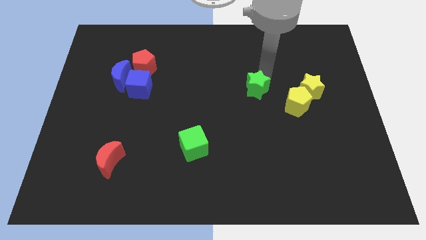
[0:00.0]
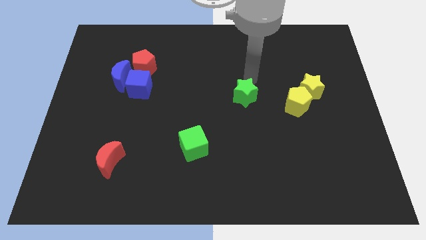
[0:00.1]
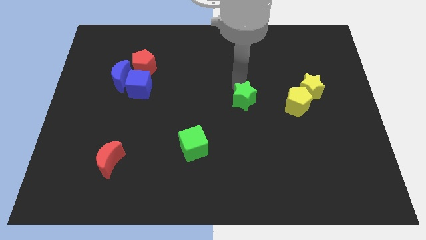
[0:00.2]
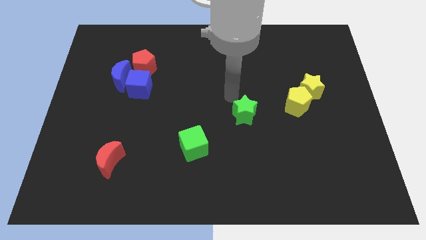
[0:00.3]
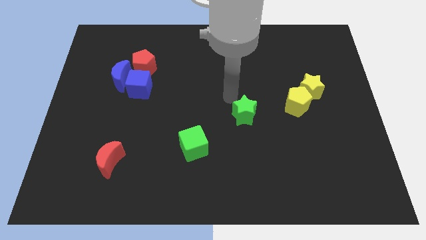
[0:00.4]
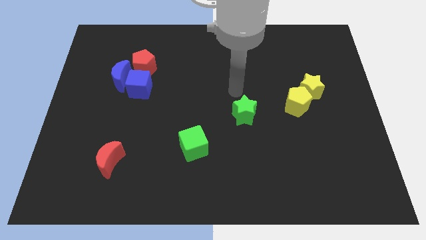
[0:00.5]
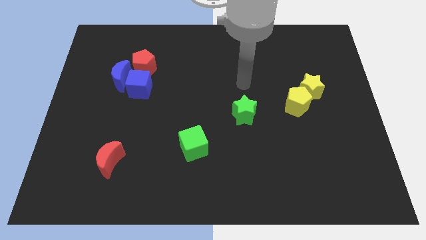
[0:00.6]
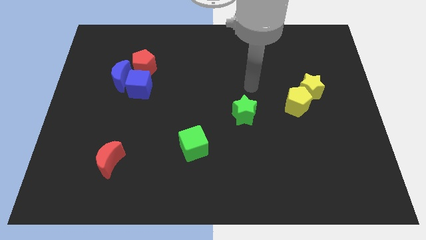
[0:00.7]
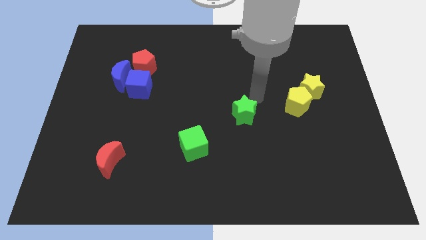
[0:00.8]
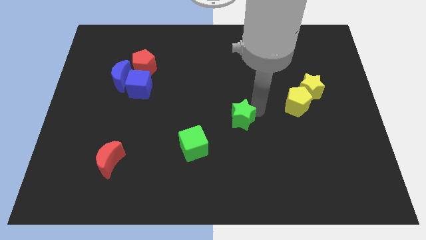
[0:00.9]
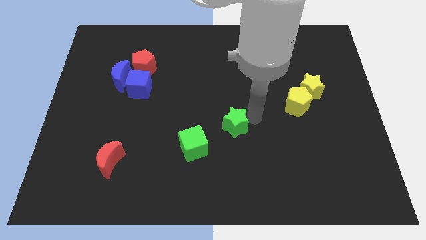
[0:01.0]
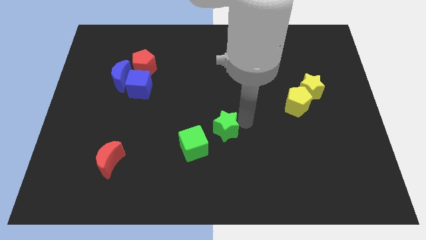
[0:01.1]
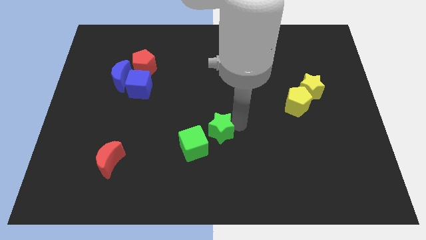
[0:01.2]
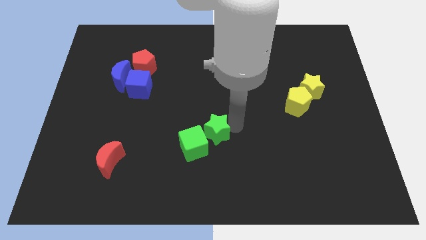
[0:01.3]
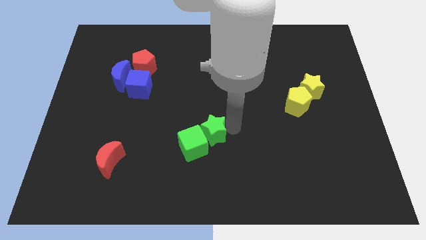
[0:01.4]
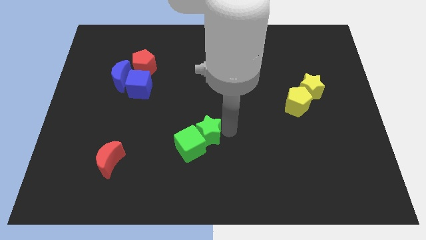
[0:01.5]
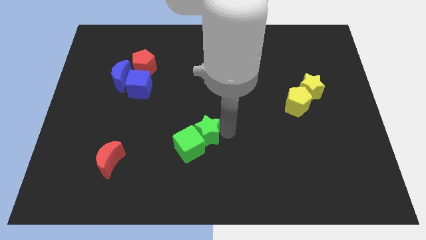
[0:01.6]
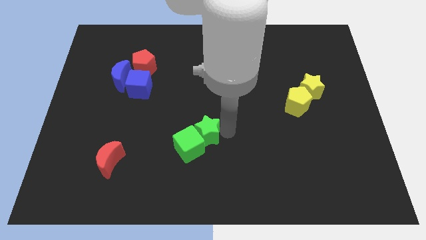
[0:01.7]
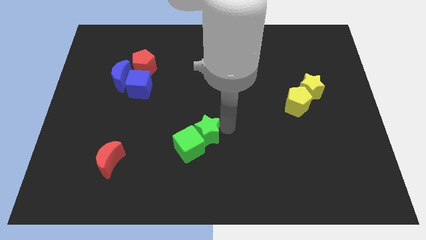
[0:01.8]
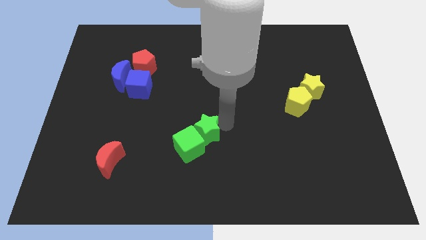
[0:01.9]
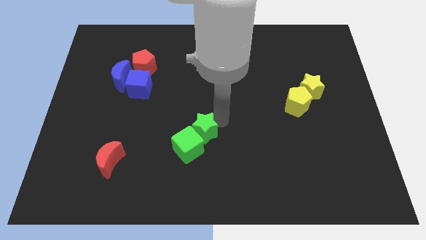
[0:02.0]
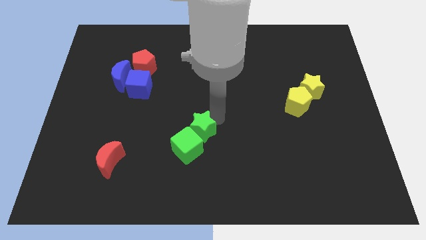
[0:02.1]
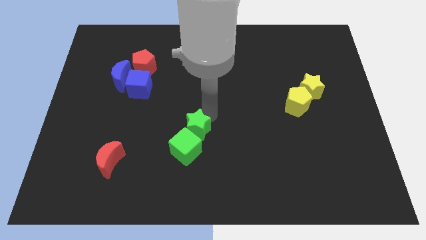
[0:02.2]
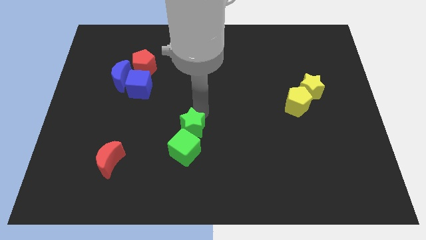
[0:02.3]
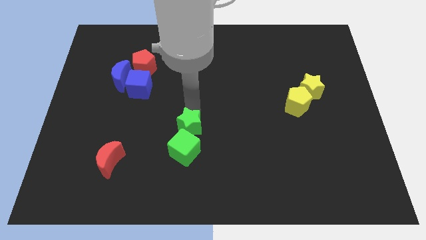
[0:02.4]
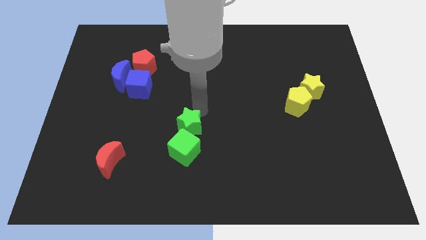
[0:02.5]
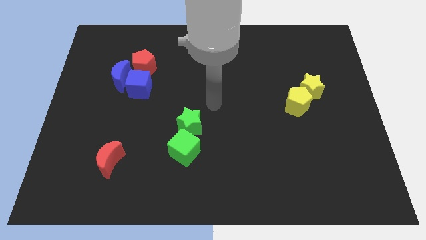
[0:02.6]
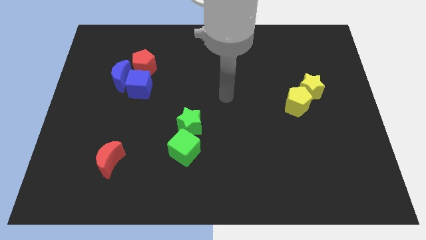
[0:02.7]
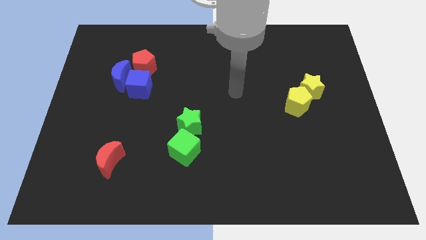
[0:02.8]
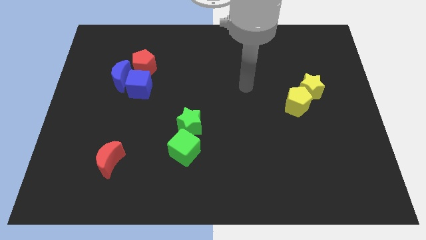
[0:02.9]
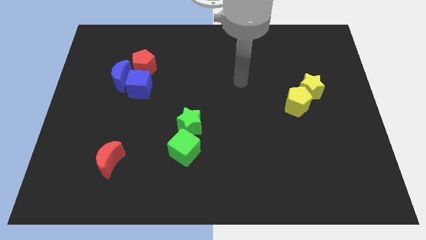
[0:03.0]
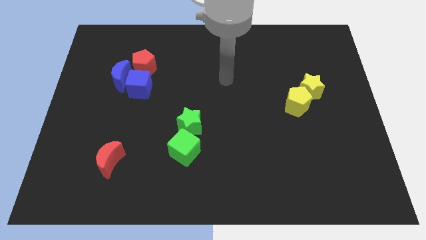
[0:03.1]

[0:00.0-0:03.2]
push the green star into the green cube

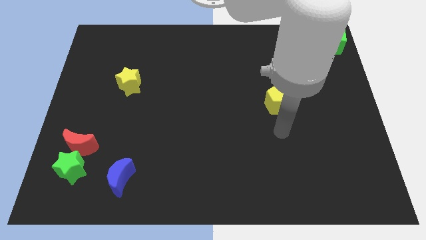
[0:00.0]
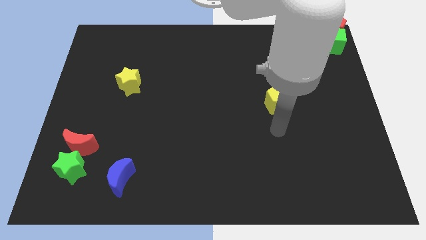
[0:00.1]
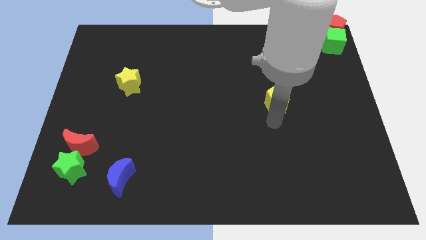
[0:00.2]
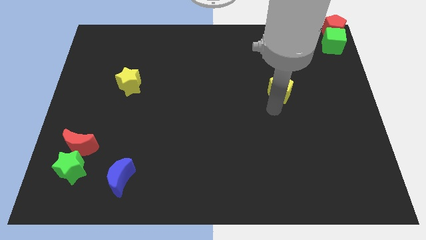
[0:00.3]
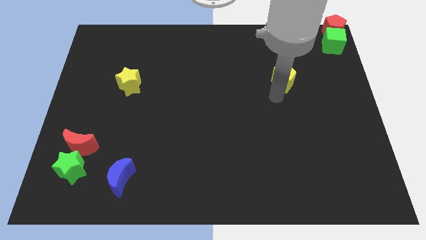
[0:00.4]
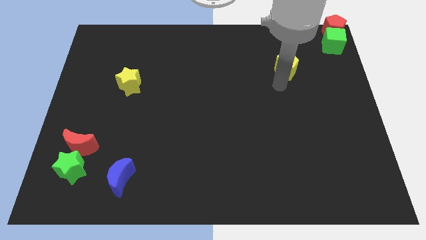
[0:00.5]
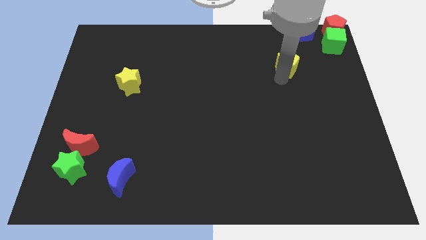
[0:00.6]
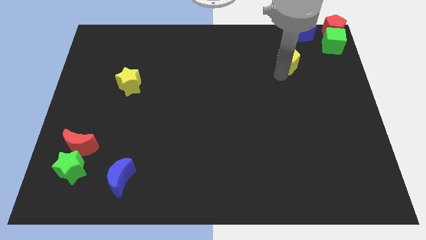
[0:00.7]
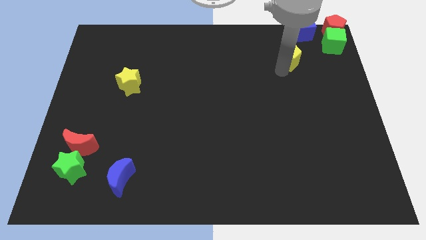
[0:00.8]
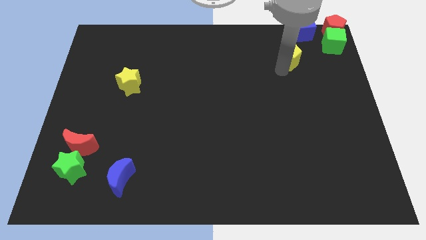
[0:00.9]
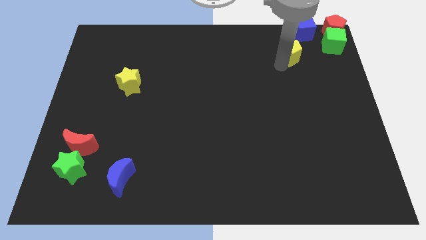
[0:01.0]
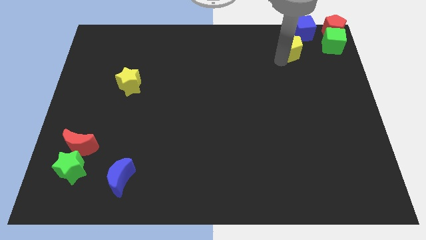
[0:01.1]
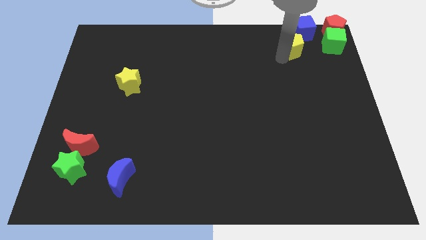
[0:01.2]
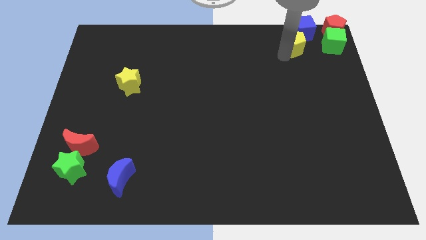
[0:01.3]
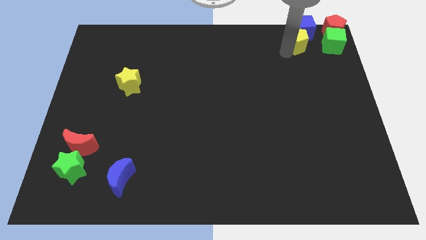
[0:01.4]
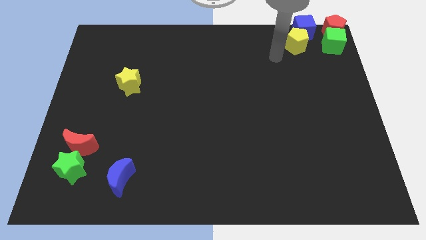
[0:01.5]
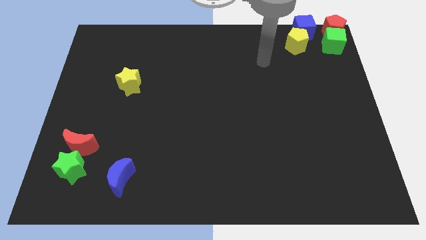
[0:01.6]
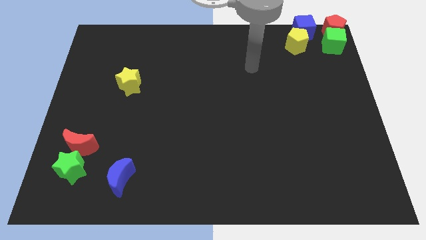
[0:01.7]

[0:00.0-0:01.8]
drag yellow pentagon to the bottom left of the blue cube

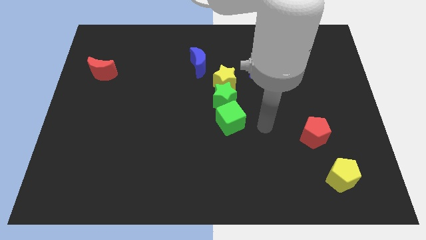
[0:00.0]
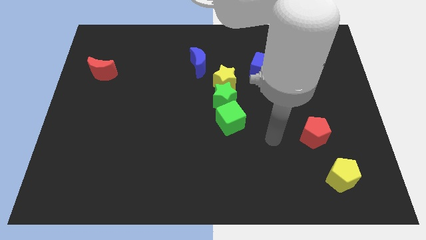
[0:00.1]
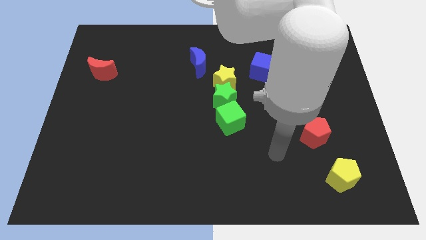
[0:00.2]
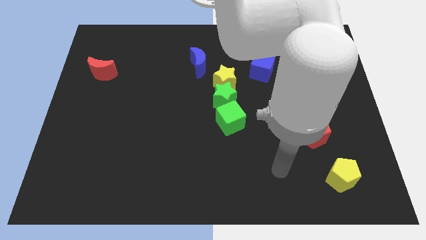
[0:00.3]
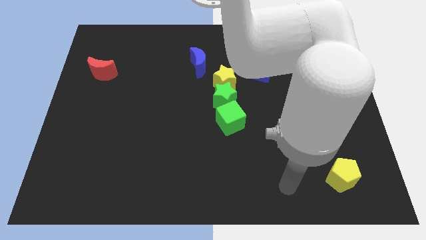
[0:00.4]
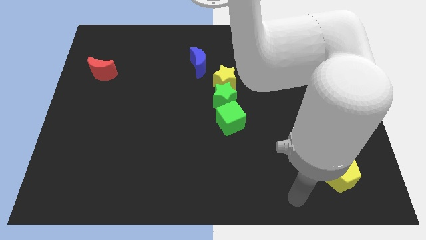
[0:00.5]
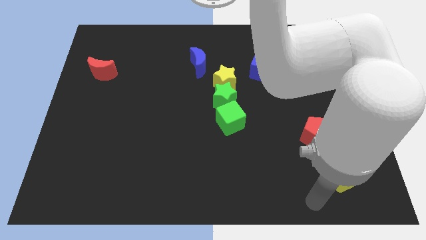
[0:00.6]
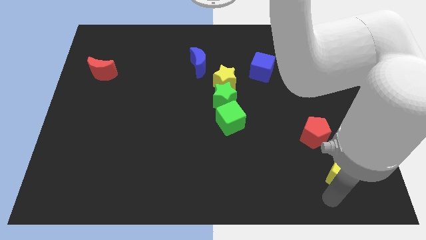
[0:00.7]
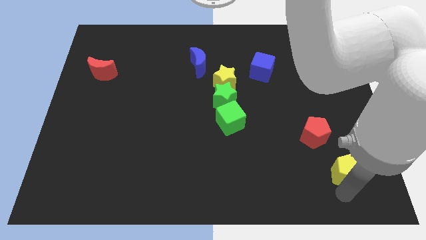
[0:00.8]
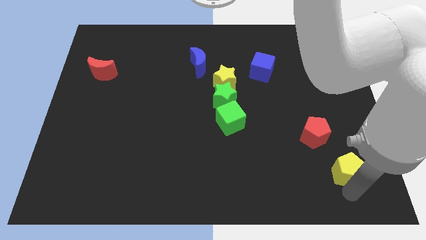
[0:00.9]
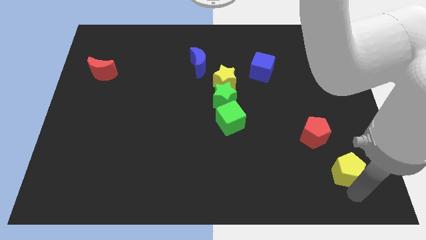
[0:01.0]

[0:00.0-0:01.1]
move your arm at the bottom of the yellow pentagon

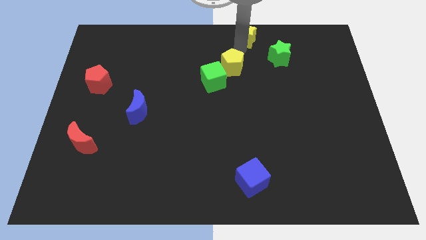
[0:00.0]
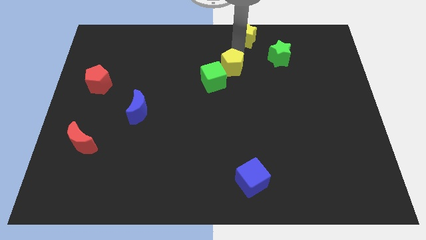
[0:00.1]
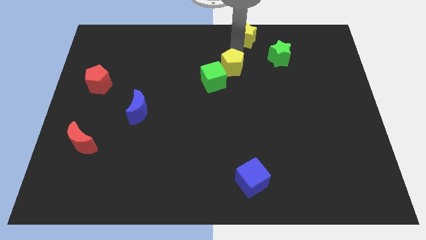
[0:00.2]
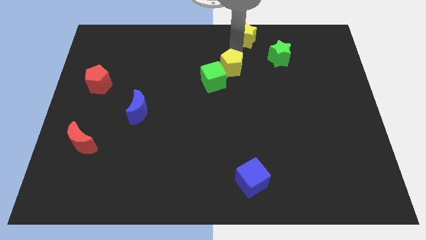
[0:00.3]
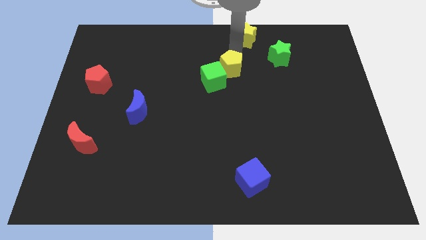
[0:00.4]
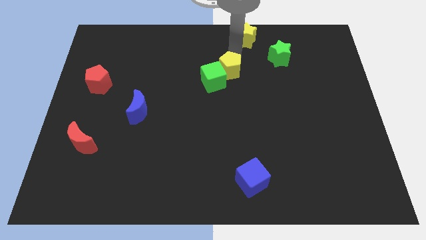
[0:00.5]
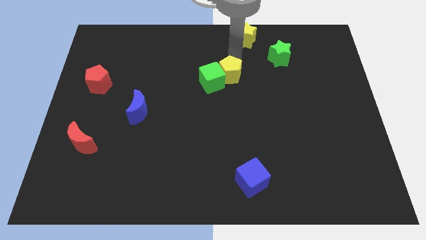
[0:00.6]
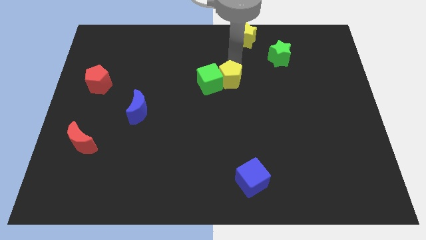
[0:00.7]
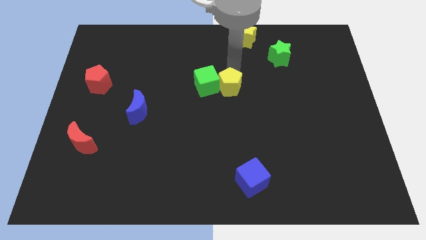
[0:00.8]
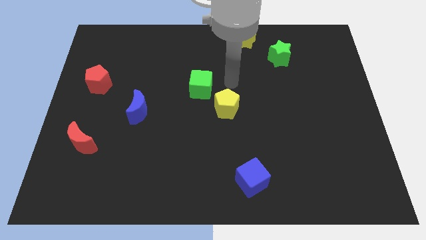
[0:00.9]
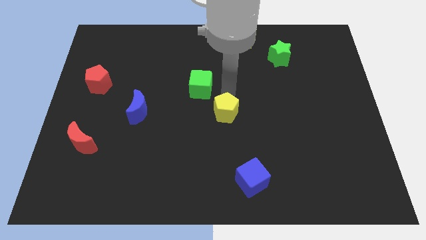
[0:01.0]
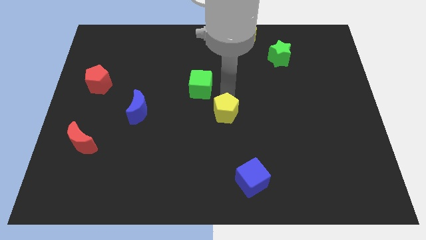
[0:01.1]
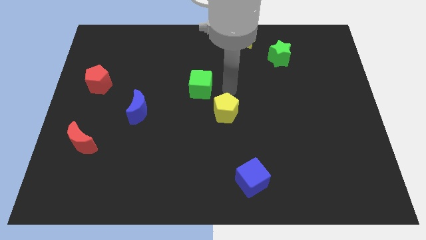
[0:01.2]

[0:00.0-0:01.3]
push yellow pentagon slightly towards down

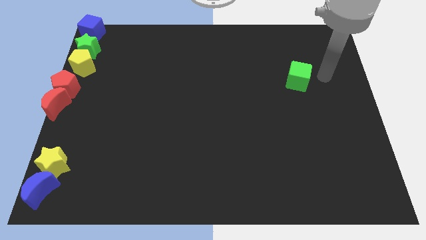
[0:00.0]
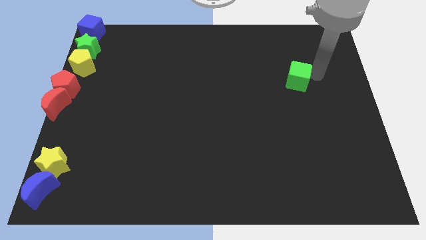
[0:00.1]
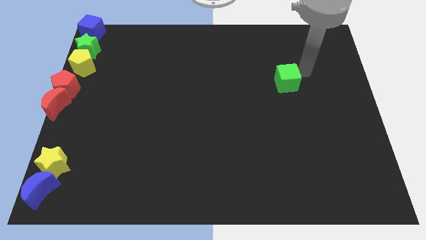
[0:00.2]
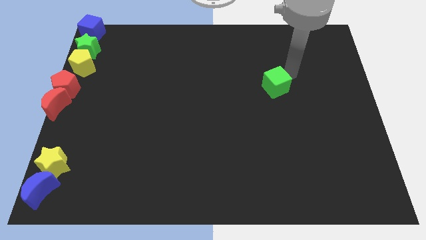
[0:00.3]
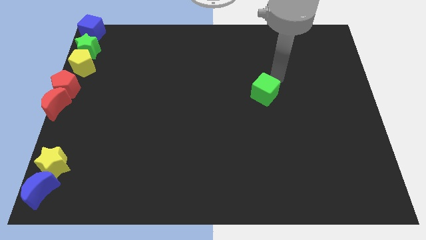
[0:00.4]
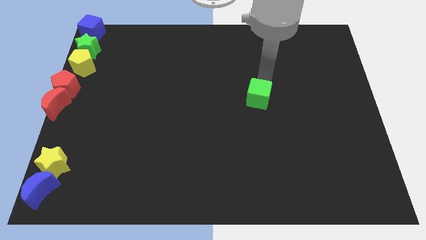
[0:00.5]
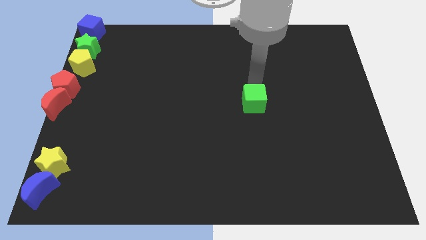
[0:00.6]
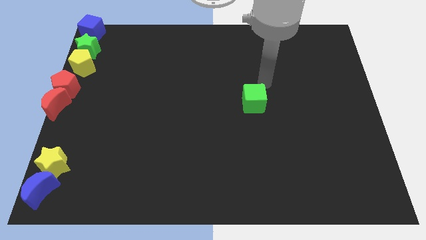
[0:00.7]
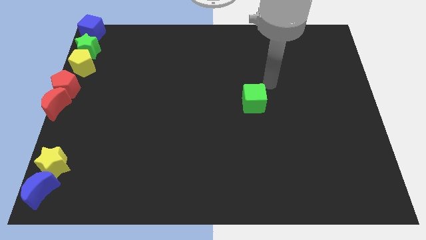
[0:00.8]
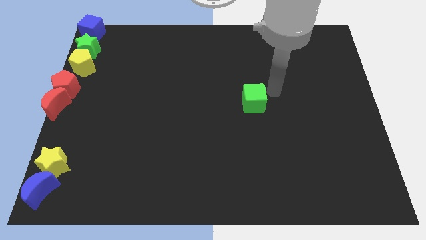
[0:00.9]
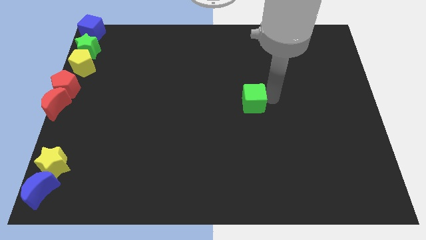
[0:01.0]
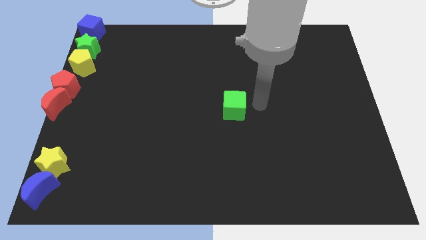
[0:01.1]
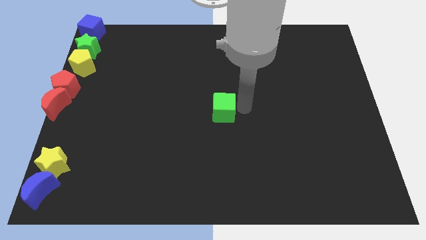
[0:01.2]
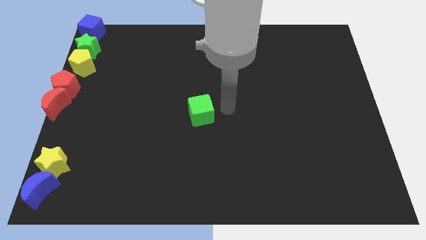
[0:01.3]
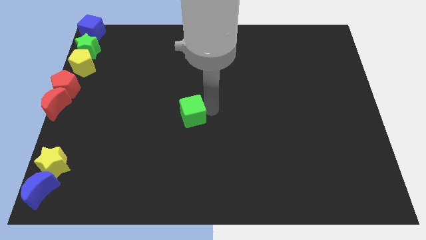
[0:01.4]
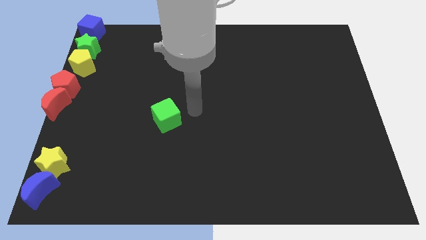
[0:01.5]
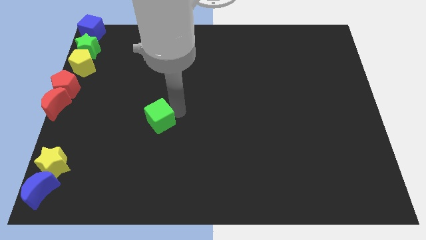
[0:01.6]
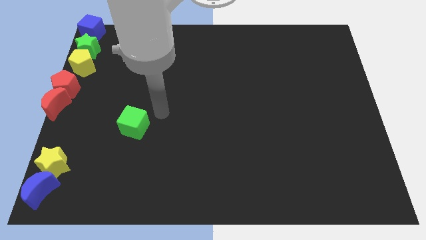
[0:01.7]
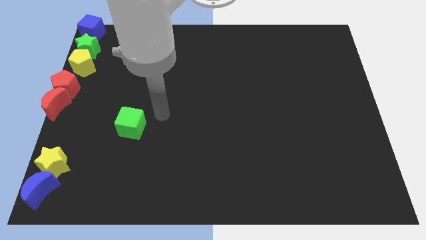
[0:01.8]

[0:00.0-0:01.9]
push the green cube towards the yellow star
